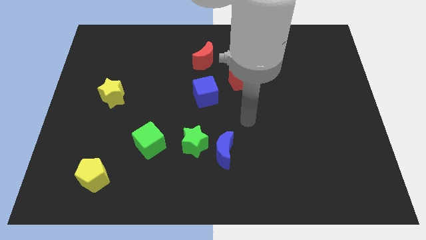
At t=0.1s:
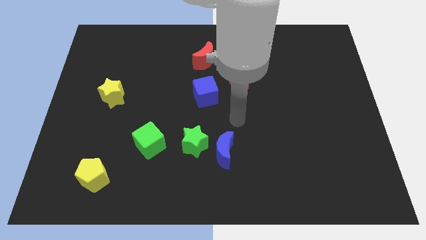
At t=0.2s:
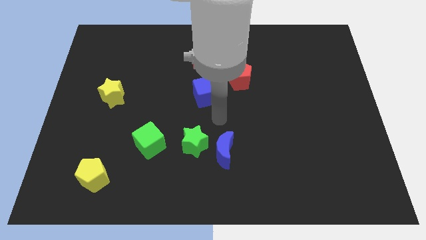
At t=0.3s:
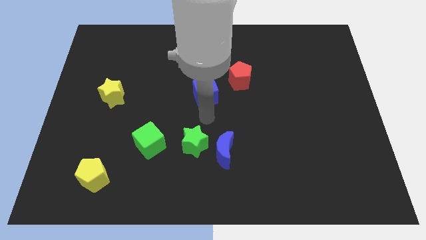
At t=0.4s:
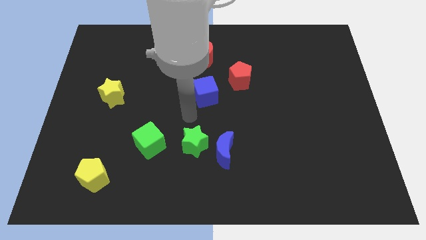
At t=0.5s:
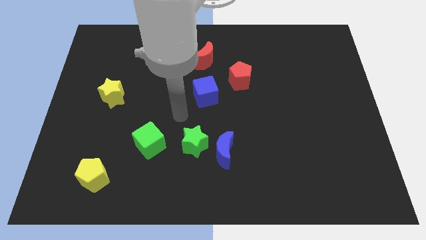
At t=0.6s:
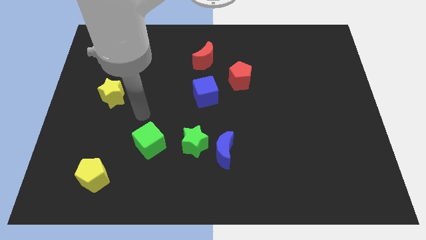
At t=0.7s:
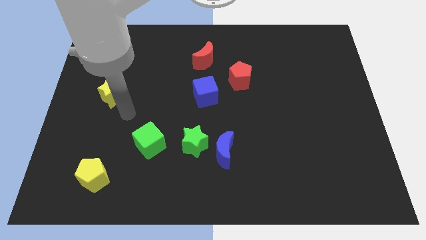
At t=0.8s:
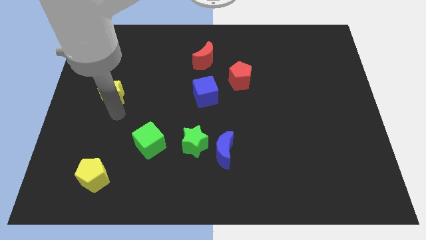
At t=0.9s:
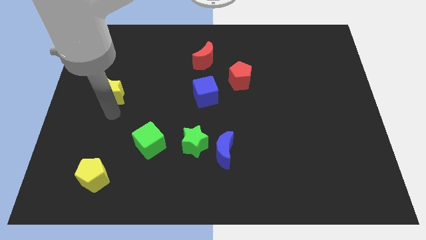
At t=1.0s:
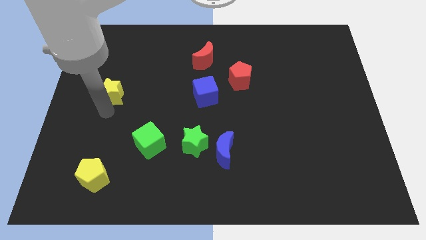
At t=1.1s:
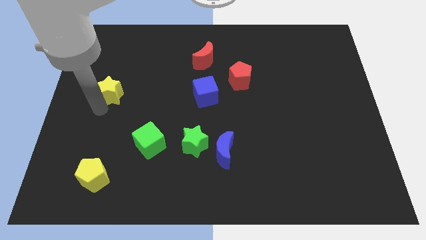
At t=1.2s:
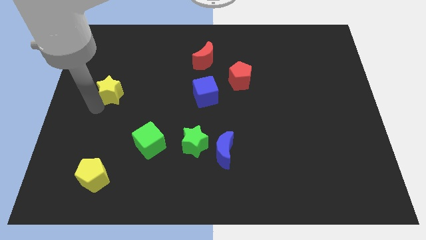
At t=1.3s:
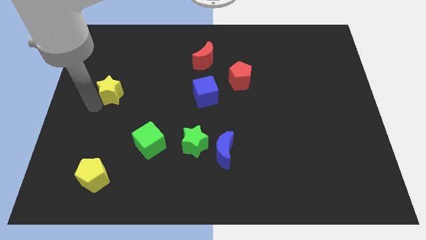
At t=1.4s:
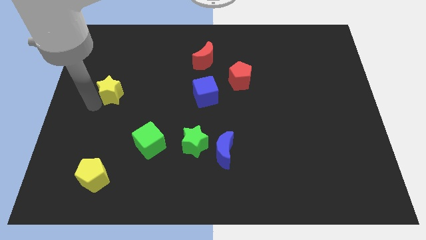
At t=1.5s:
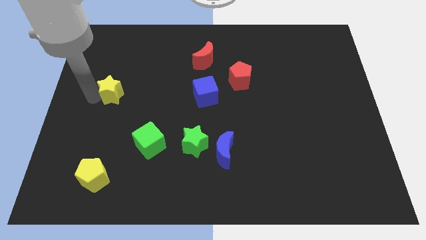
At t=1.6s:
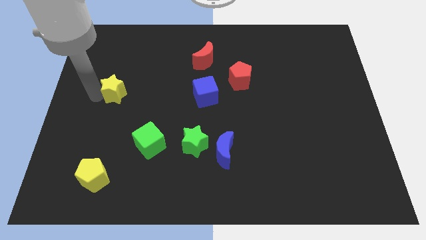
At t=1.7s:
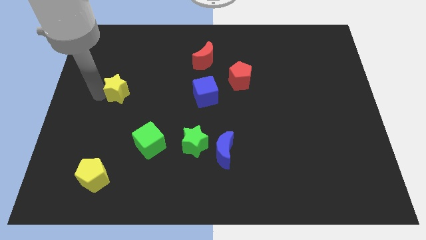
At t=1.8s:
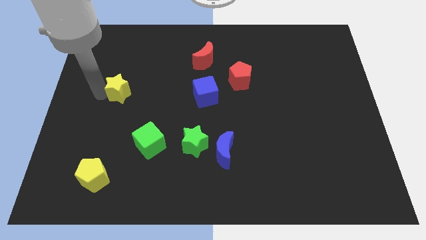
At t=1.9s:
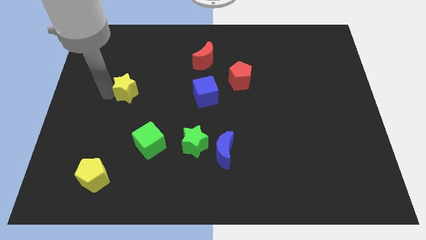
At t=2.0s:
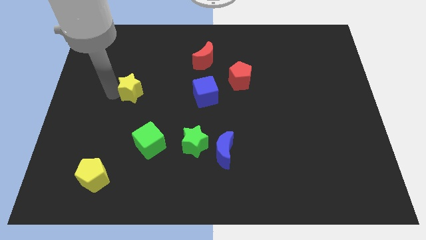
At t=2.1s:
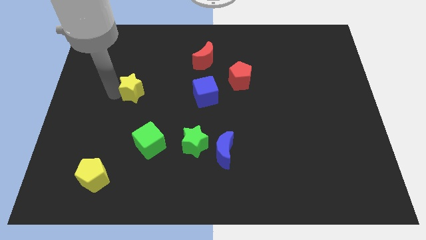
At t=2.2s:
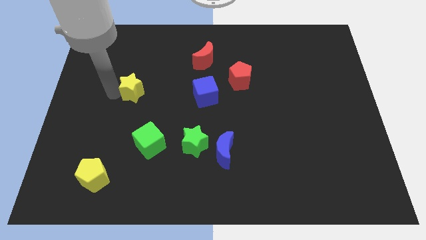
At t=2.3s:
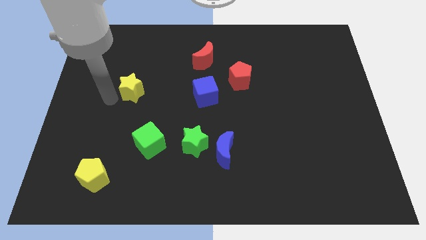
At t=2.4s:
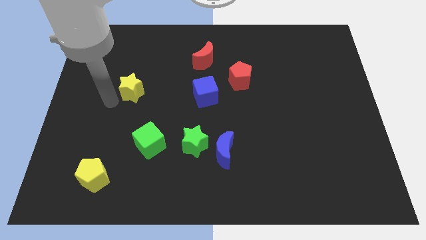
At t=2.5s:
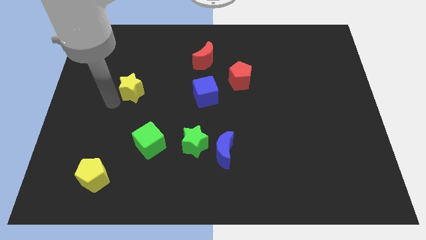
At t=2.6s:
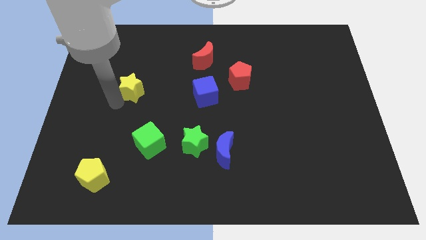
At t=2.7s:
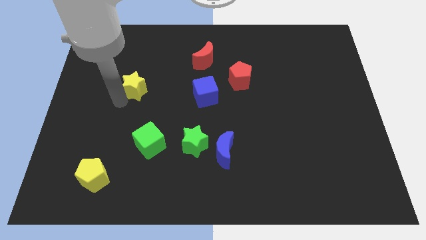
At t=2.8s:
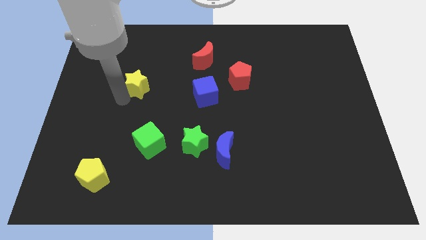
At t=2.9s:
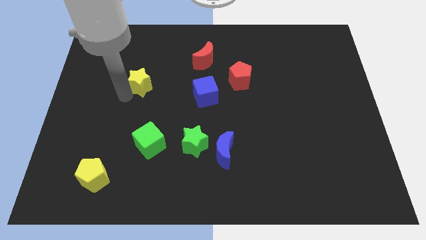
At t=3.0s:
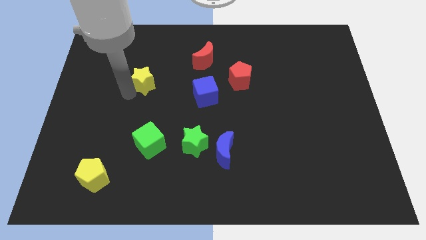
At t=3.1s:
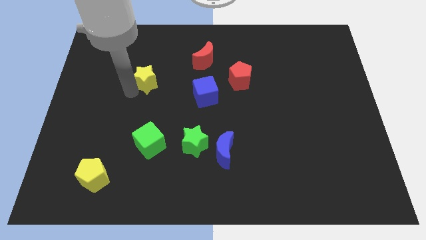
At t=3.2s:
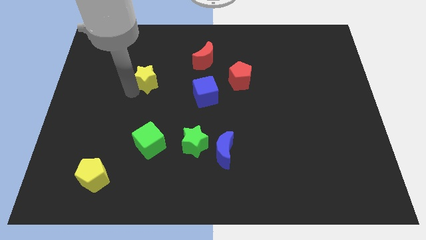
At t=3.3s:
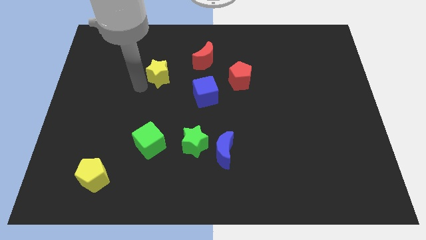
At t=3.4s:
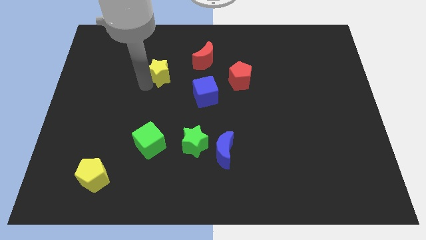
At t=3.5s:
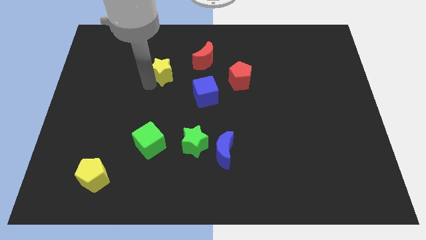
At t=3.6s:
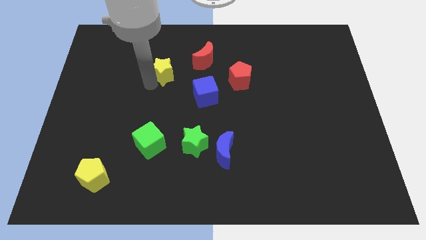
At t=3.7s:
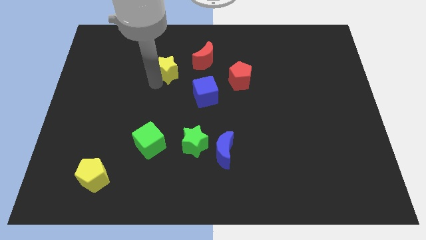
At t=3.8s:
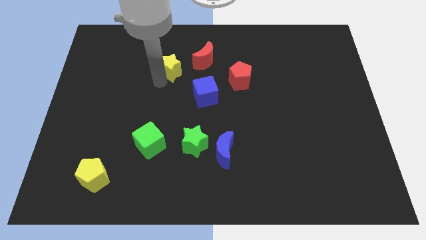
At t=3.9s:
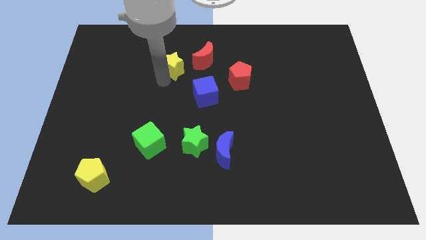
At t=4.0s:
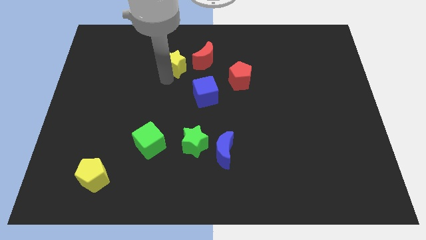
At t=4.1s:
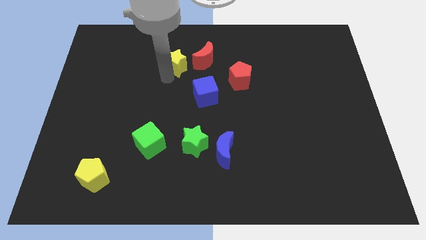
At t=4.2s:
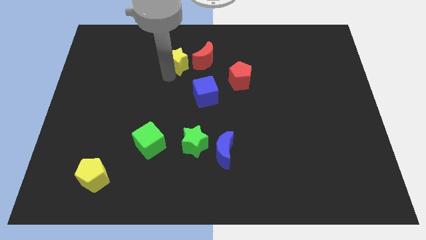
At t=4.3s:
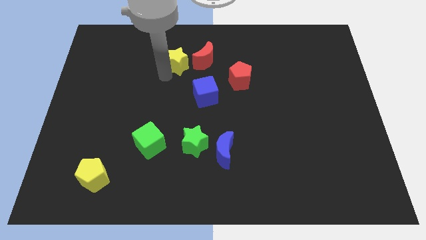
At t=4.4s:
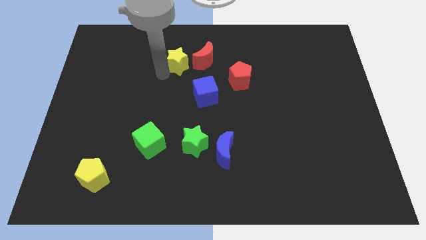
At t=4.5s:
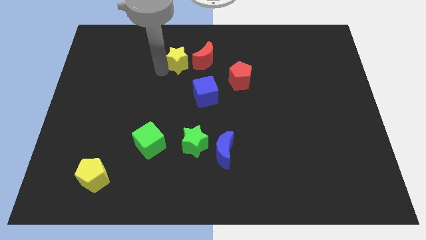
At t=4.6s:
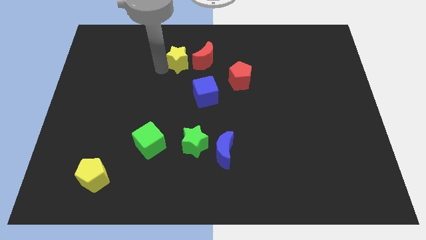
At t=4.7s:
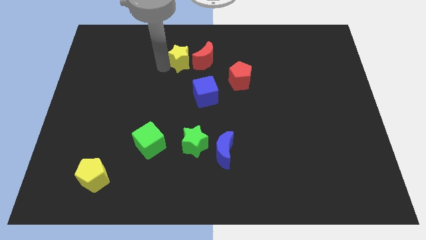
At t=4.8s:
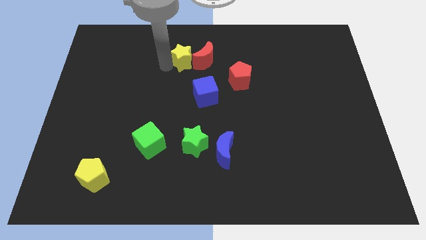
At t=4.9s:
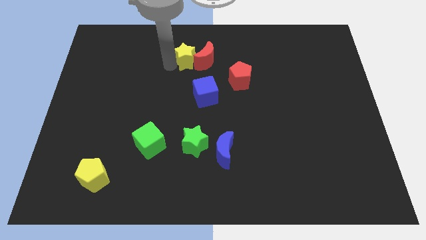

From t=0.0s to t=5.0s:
push the yellow star to the red moon

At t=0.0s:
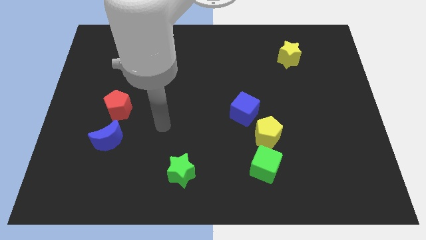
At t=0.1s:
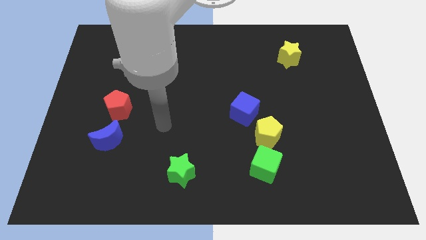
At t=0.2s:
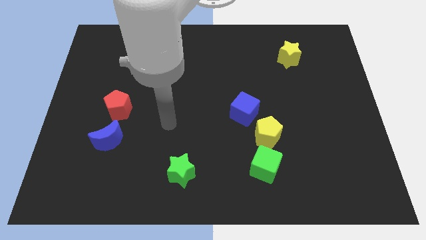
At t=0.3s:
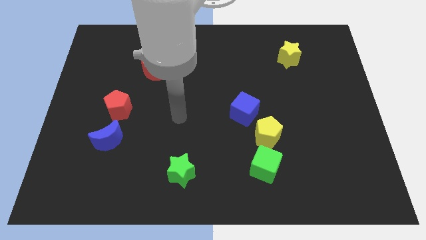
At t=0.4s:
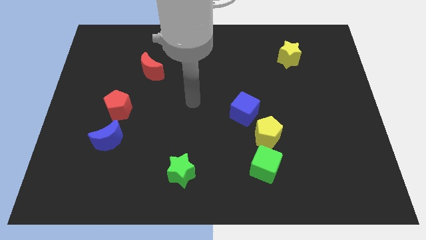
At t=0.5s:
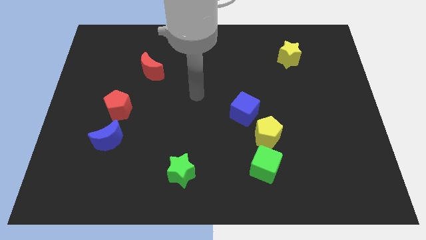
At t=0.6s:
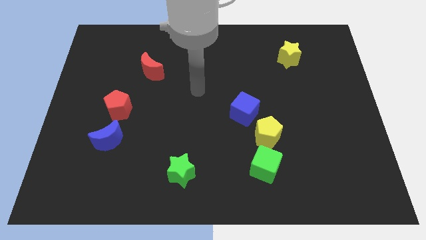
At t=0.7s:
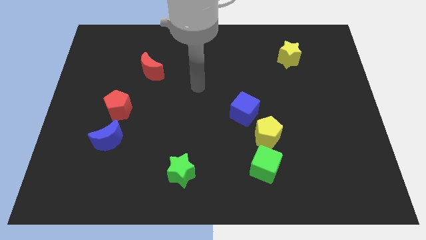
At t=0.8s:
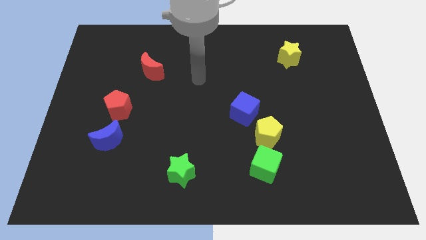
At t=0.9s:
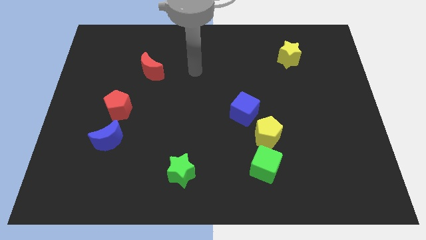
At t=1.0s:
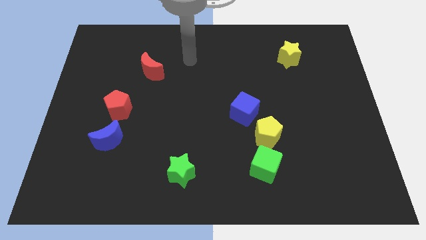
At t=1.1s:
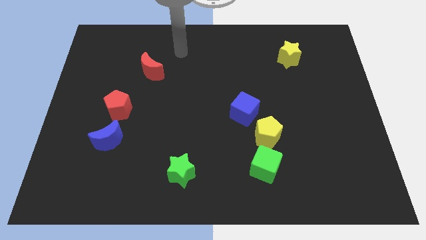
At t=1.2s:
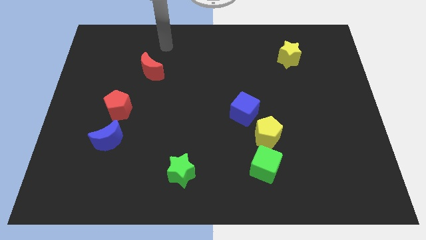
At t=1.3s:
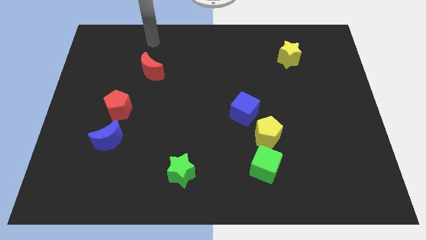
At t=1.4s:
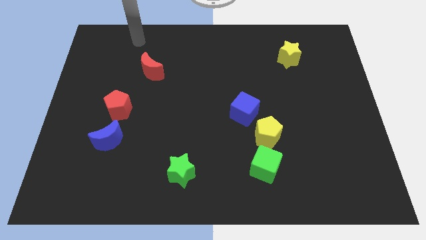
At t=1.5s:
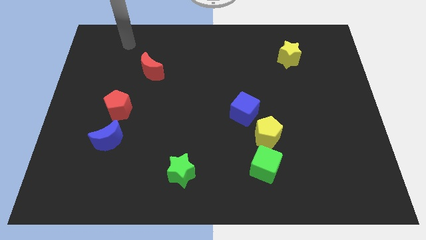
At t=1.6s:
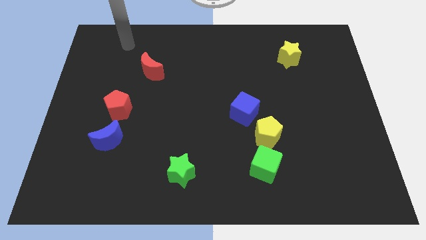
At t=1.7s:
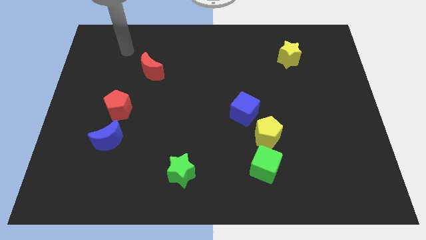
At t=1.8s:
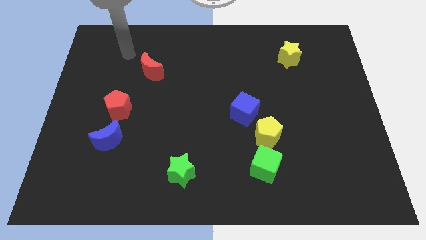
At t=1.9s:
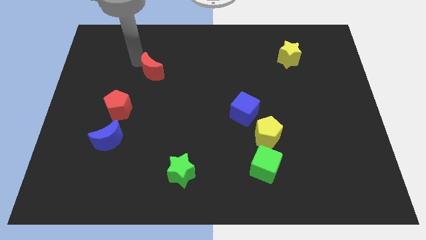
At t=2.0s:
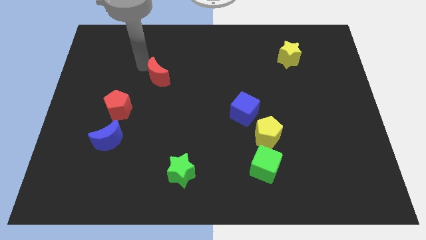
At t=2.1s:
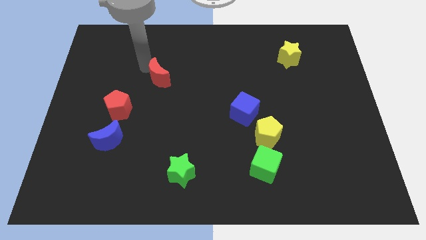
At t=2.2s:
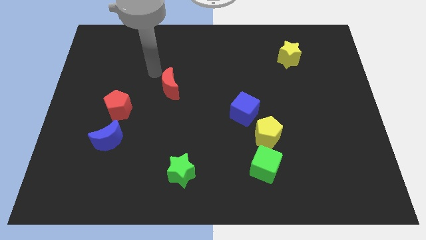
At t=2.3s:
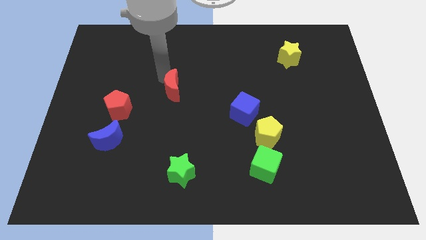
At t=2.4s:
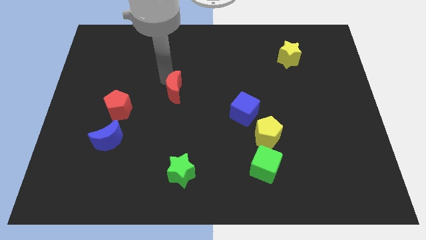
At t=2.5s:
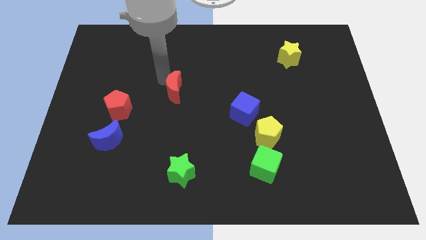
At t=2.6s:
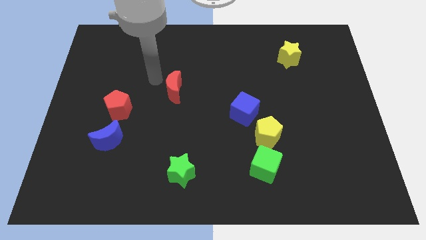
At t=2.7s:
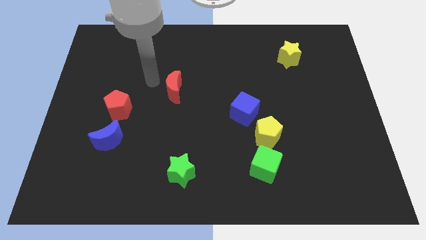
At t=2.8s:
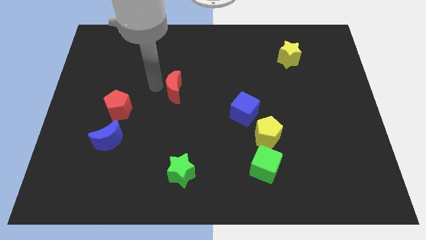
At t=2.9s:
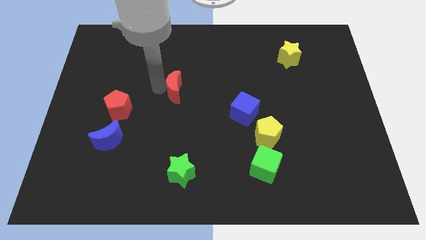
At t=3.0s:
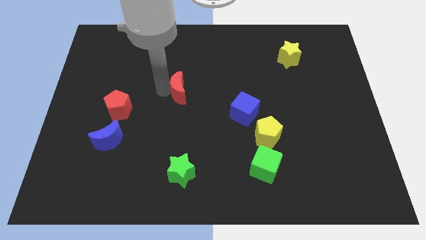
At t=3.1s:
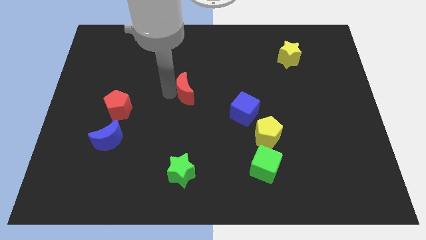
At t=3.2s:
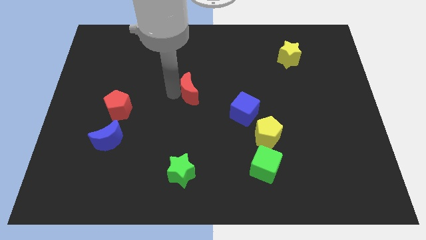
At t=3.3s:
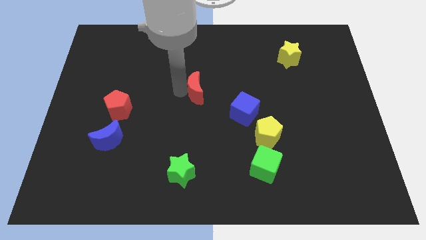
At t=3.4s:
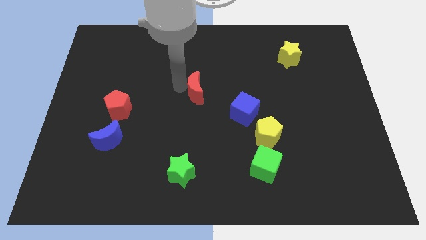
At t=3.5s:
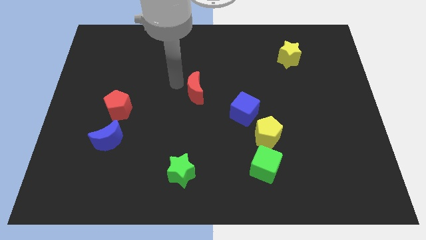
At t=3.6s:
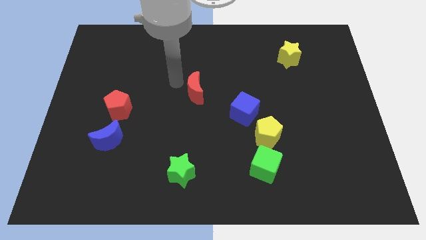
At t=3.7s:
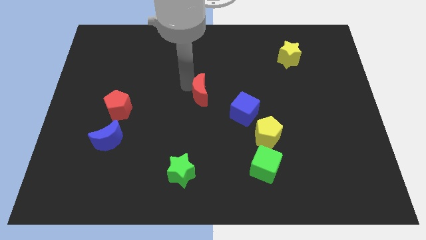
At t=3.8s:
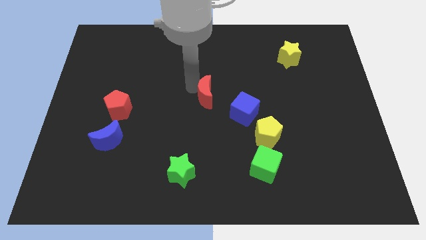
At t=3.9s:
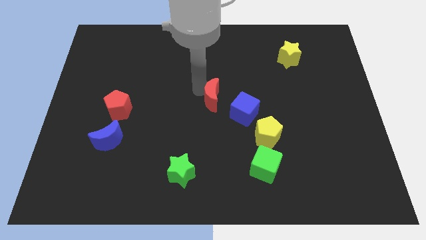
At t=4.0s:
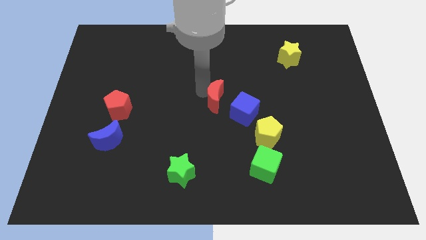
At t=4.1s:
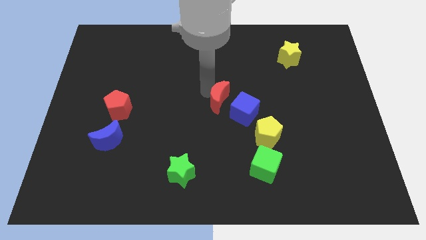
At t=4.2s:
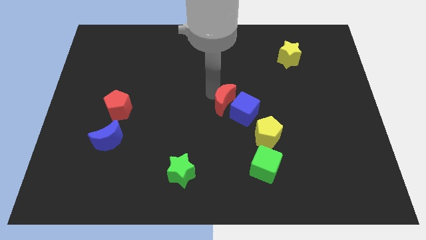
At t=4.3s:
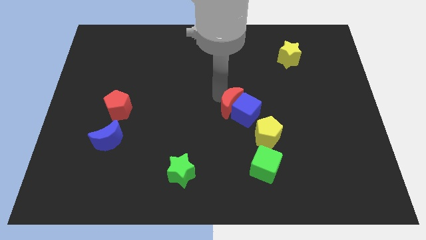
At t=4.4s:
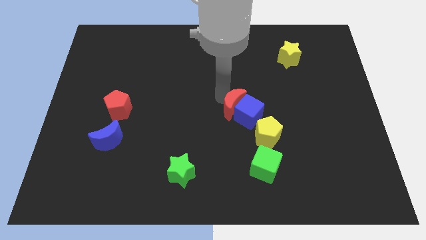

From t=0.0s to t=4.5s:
move the red moon towards the blue cube
